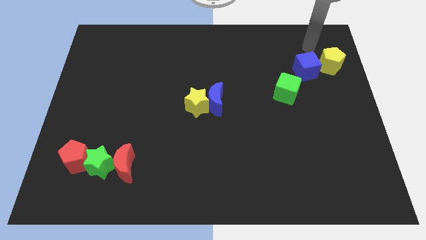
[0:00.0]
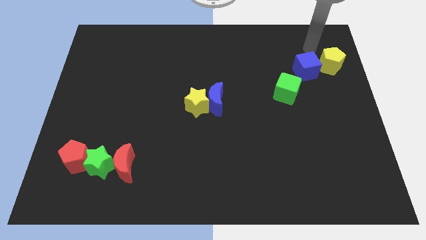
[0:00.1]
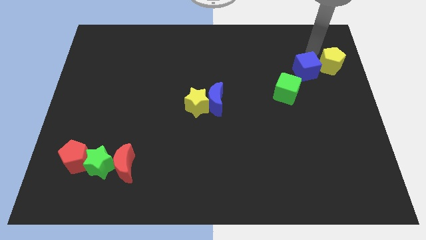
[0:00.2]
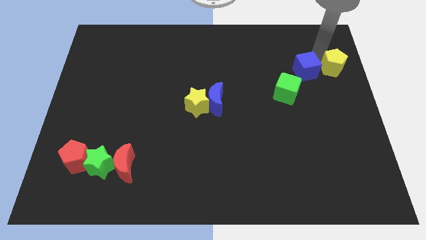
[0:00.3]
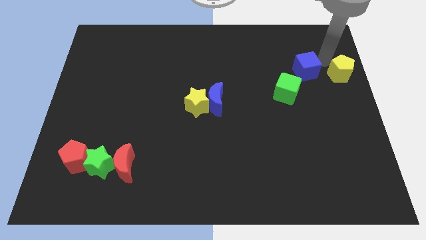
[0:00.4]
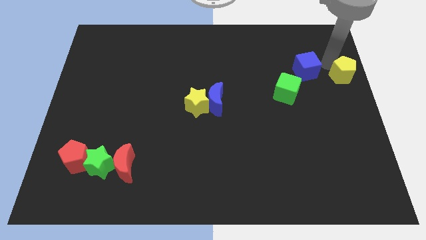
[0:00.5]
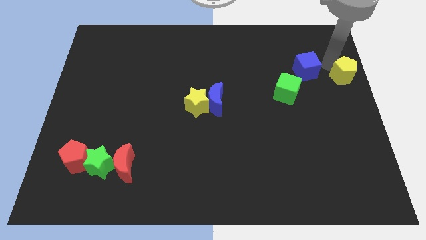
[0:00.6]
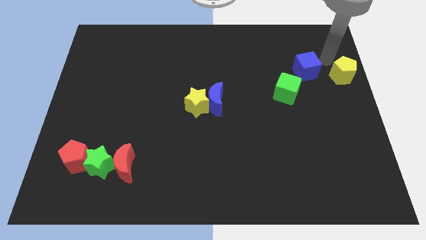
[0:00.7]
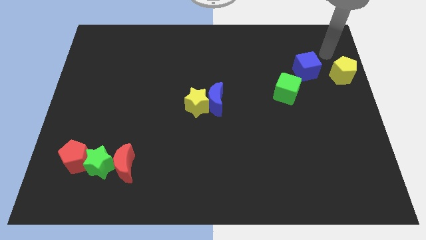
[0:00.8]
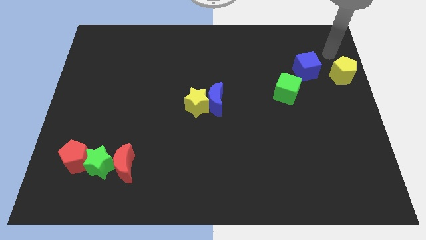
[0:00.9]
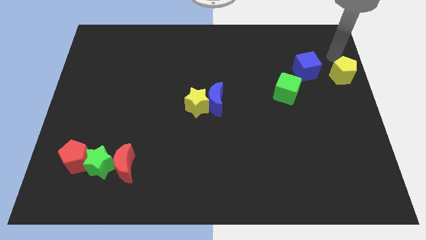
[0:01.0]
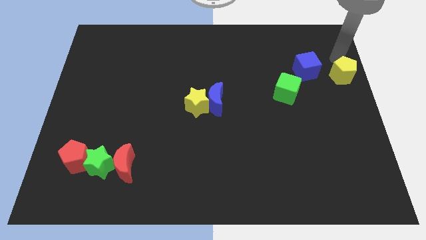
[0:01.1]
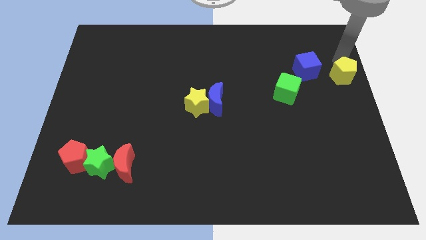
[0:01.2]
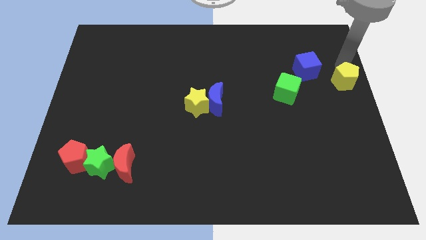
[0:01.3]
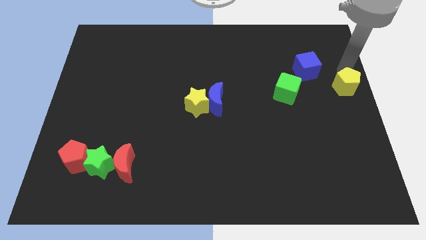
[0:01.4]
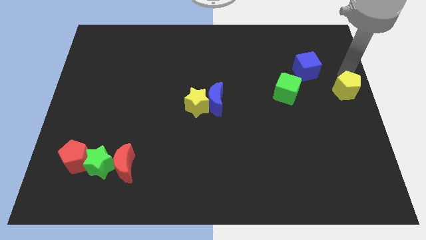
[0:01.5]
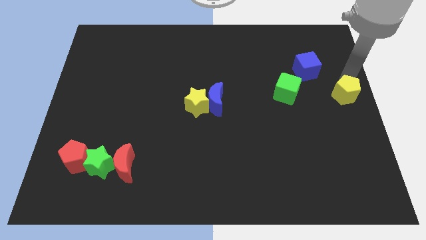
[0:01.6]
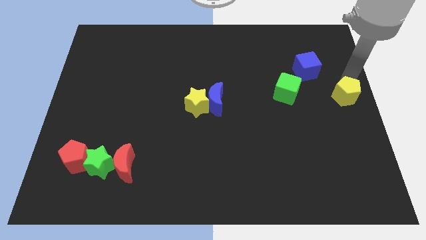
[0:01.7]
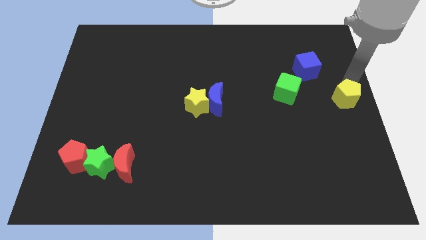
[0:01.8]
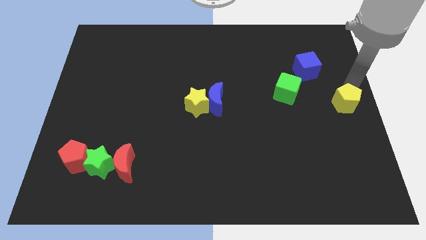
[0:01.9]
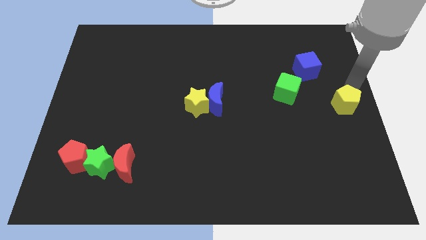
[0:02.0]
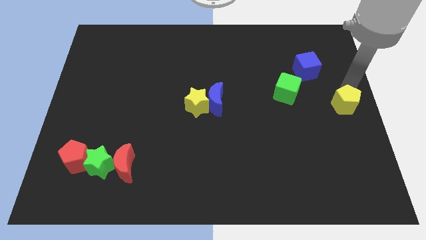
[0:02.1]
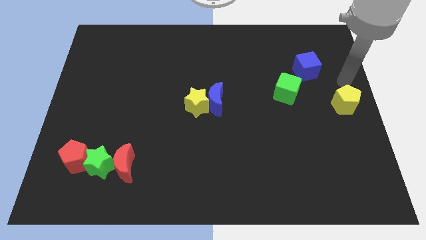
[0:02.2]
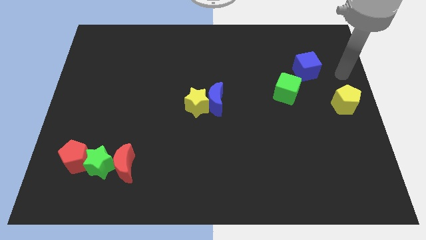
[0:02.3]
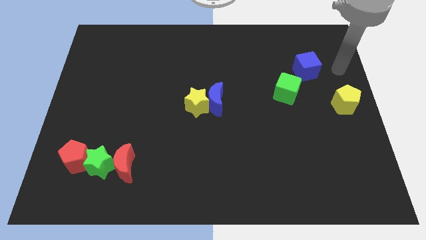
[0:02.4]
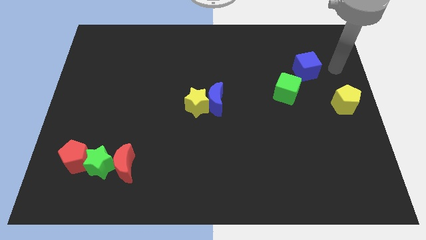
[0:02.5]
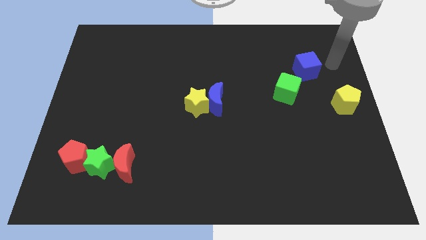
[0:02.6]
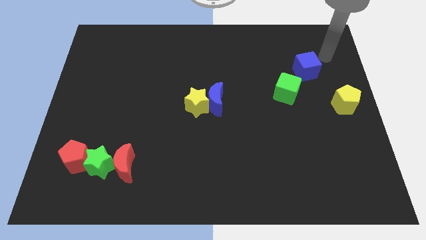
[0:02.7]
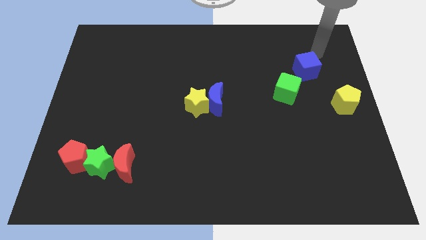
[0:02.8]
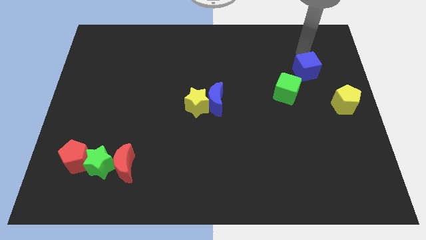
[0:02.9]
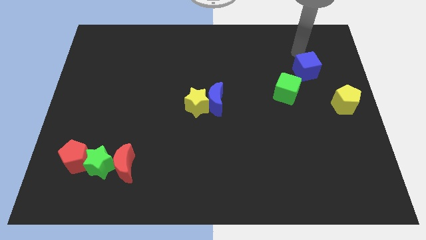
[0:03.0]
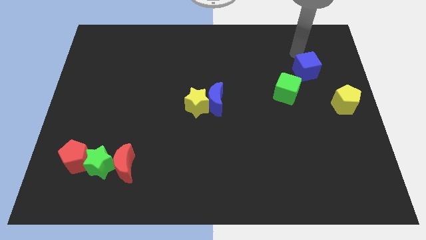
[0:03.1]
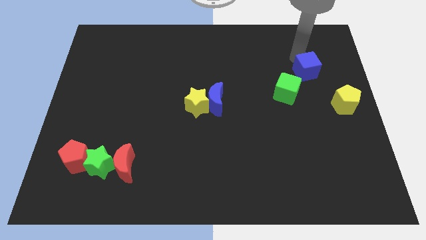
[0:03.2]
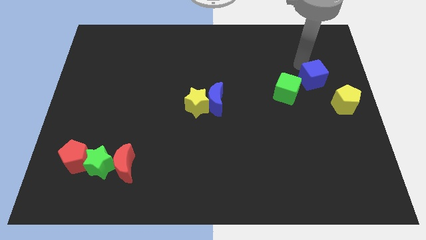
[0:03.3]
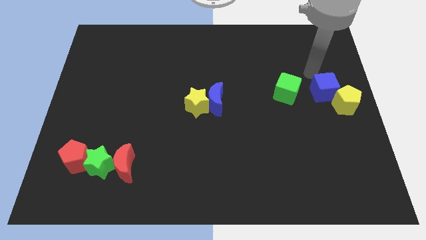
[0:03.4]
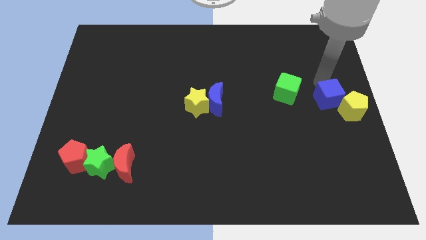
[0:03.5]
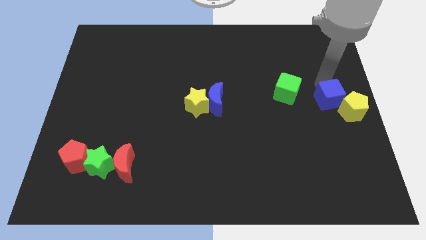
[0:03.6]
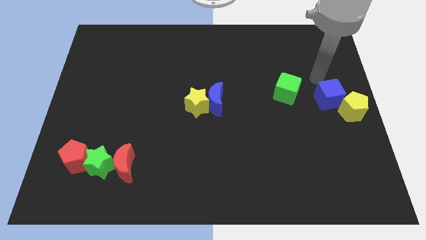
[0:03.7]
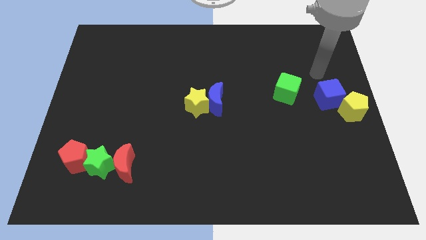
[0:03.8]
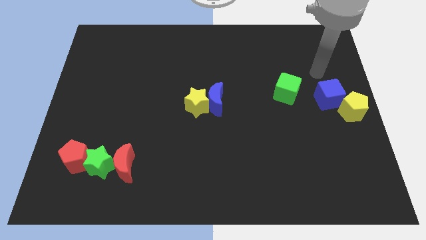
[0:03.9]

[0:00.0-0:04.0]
move the yellow pentagon and blue cube to the right center of the board

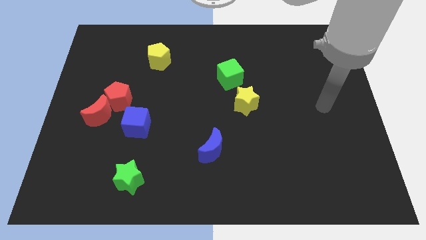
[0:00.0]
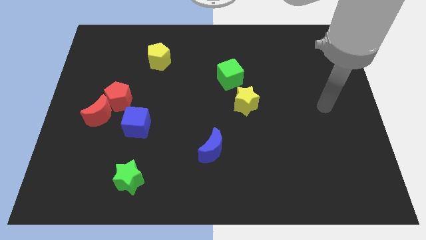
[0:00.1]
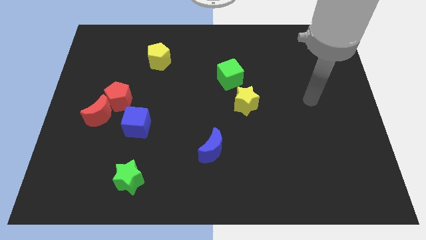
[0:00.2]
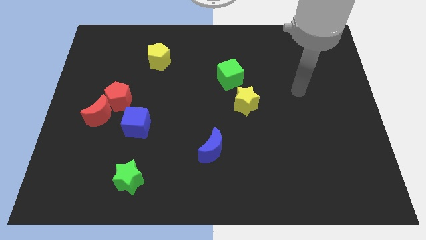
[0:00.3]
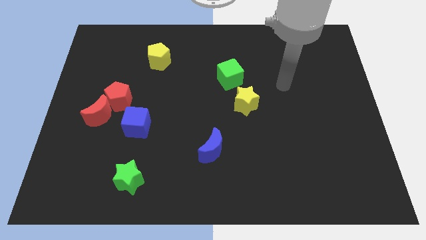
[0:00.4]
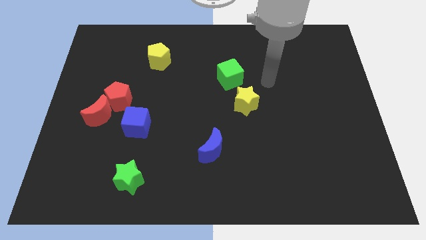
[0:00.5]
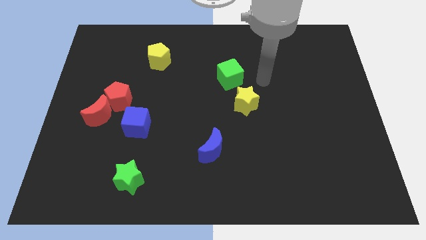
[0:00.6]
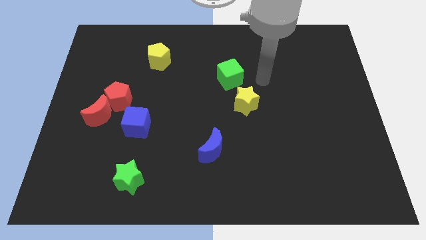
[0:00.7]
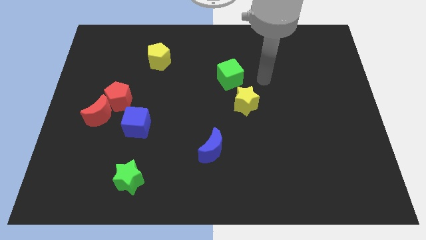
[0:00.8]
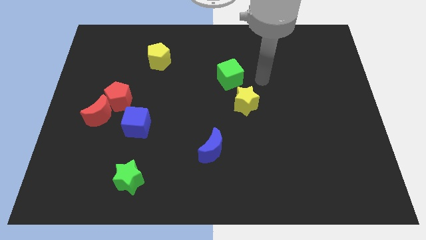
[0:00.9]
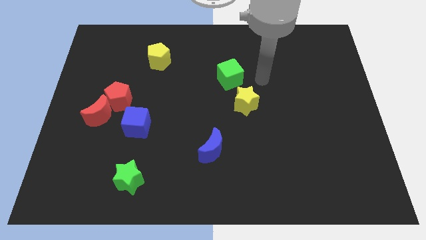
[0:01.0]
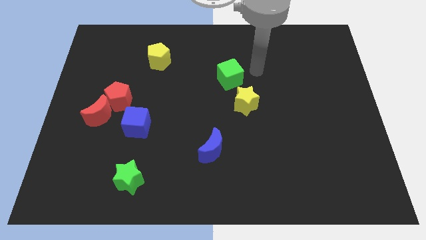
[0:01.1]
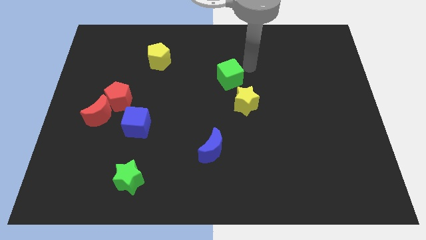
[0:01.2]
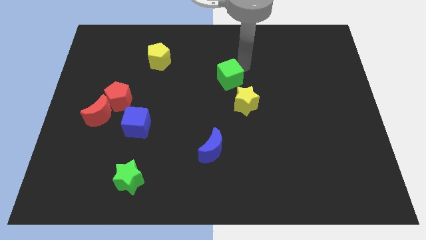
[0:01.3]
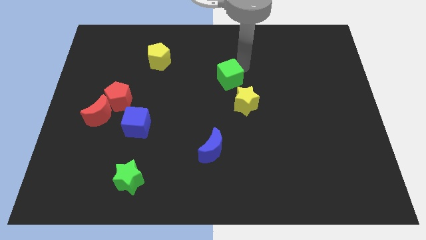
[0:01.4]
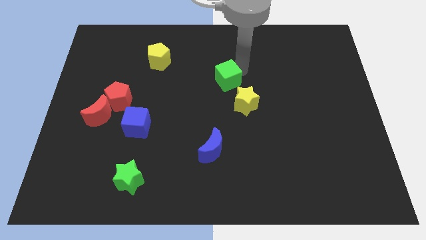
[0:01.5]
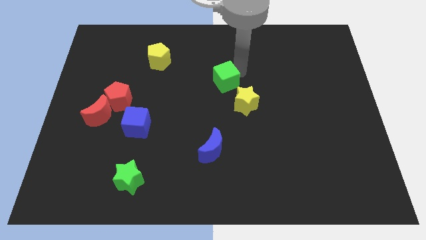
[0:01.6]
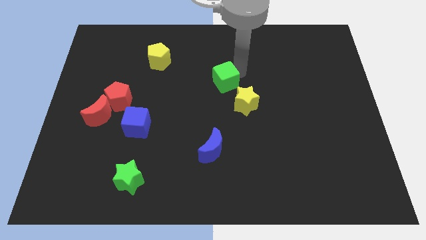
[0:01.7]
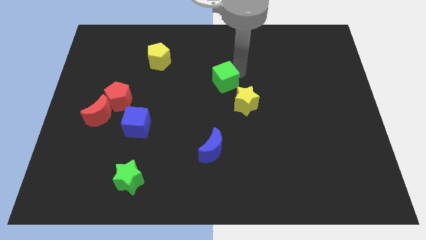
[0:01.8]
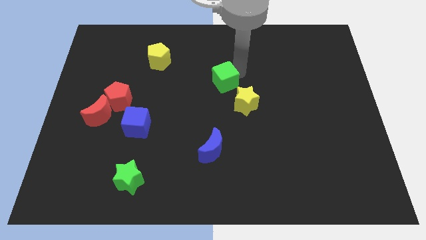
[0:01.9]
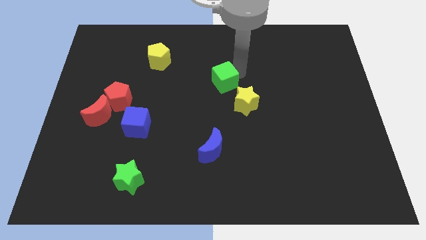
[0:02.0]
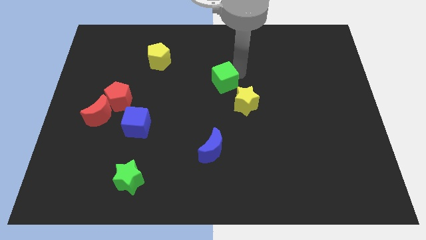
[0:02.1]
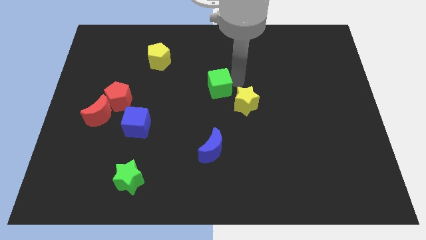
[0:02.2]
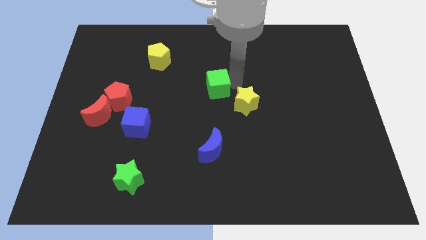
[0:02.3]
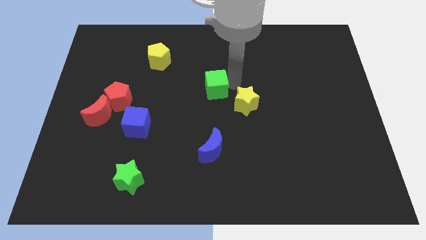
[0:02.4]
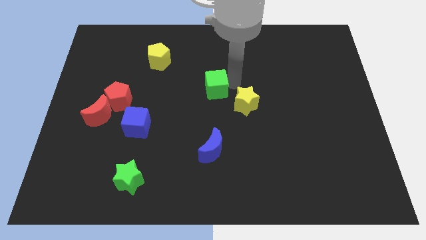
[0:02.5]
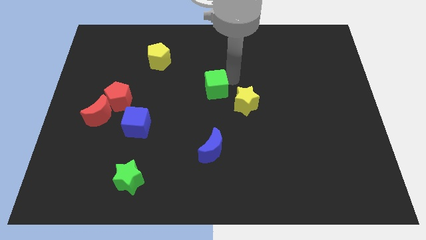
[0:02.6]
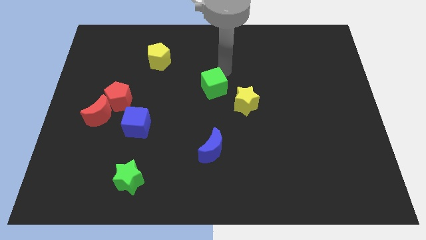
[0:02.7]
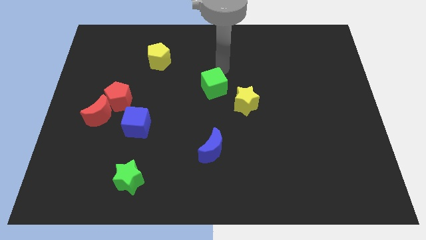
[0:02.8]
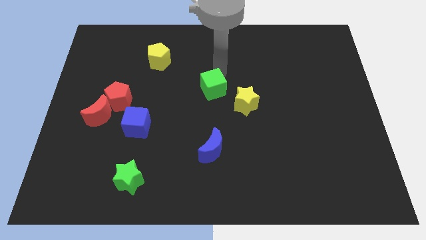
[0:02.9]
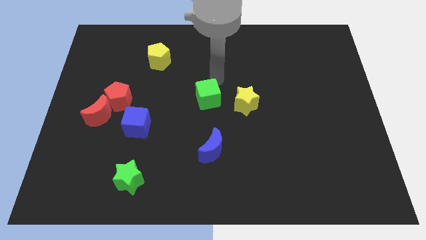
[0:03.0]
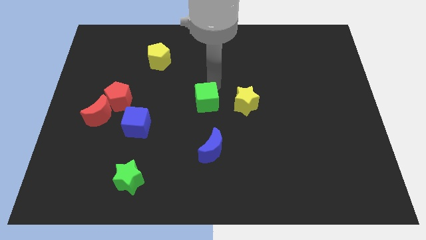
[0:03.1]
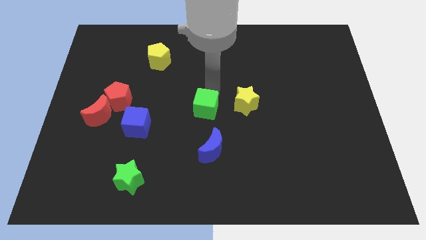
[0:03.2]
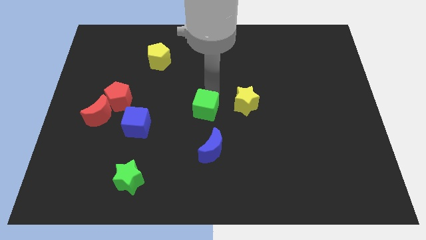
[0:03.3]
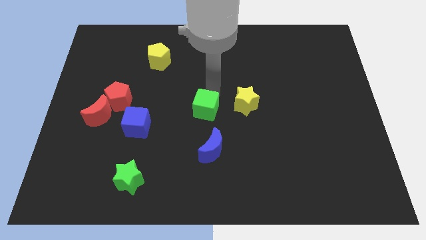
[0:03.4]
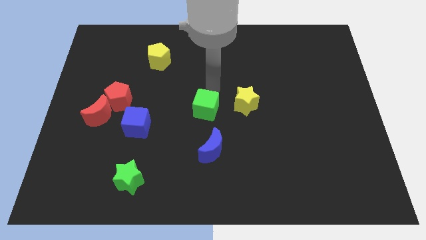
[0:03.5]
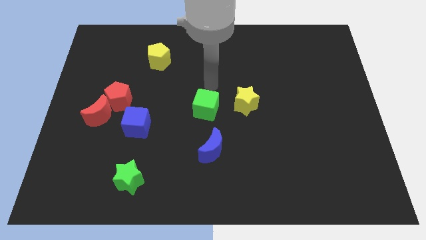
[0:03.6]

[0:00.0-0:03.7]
place the green cube at the center

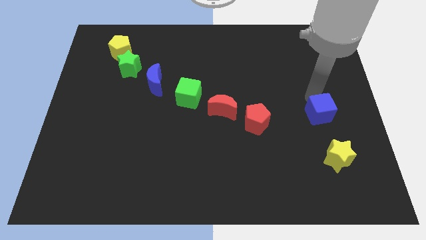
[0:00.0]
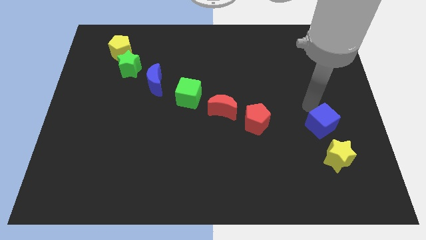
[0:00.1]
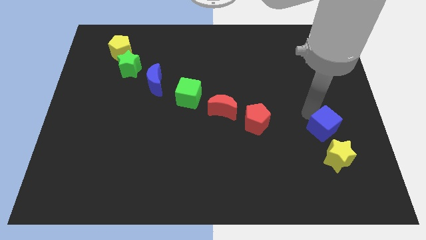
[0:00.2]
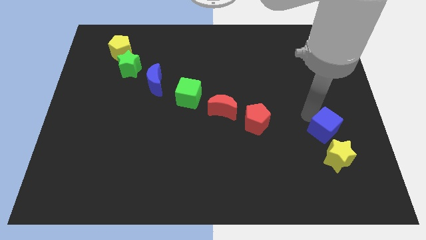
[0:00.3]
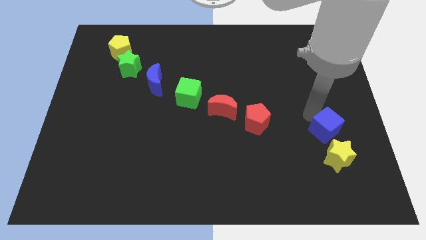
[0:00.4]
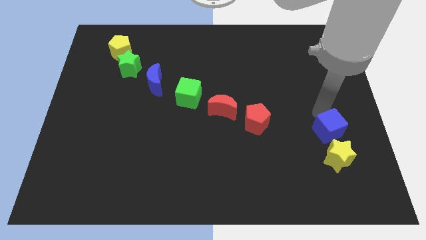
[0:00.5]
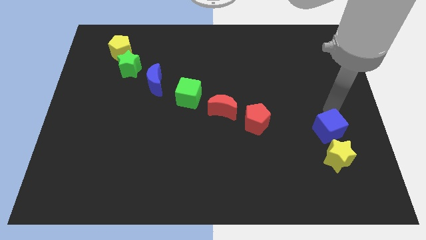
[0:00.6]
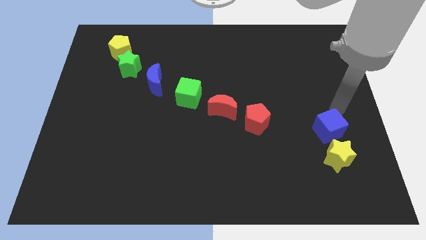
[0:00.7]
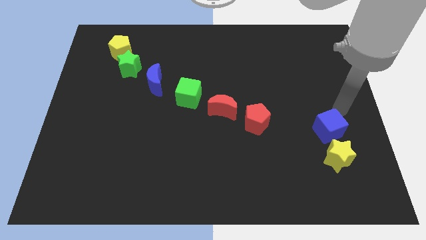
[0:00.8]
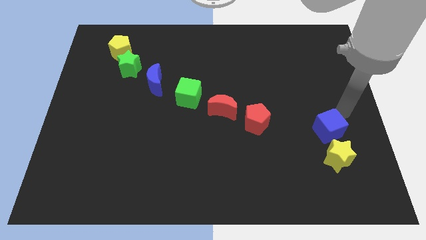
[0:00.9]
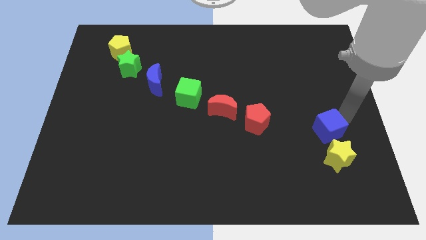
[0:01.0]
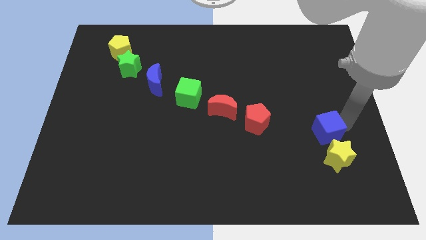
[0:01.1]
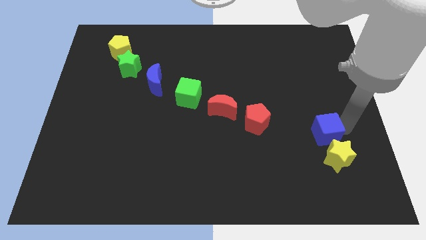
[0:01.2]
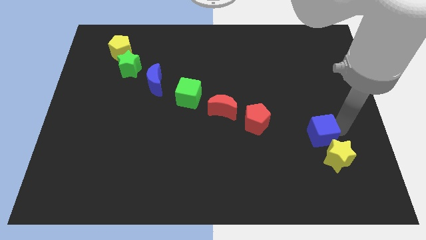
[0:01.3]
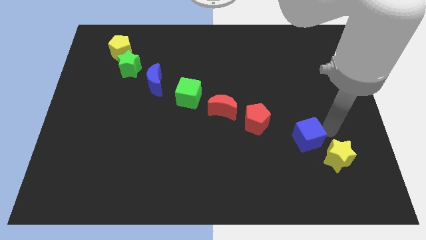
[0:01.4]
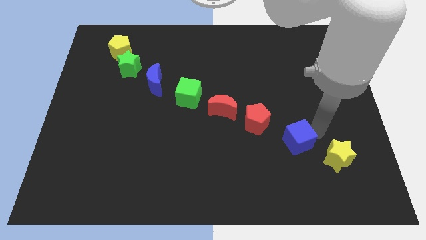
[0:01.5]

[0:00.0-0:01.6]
place the blue cube diagonally in between the yellow star and red pentagon
